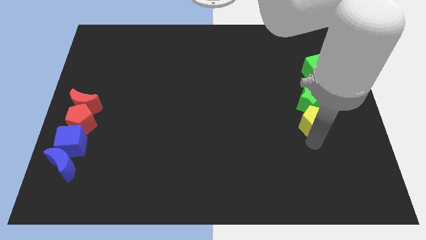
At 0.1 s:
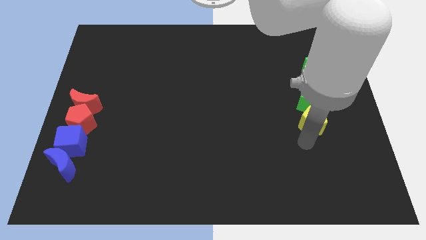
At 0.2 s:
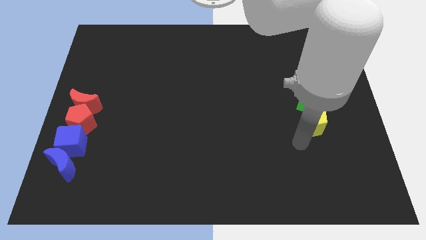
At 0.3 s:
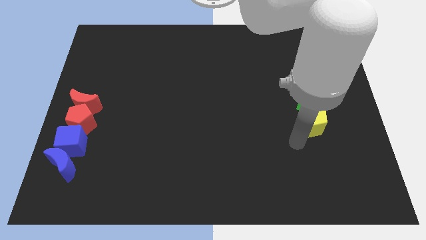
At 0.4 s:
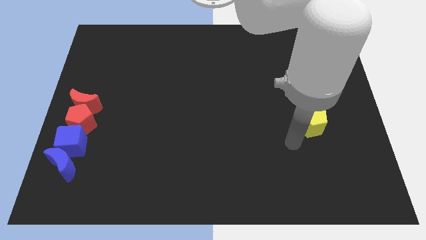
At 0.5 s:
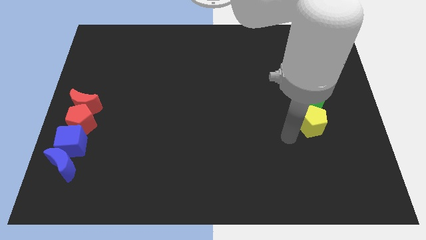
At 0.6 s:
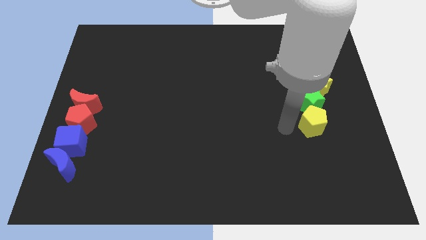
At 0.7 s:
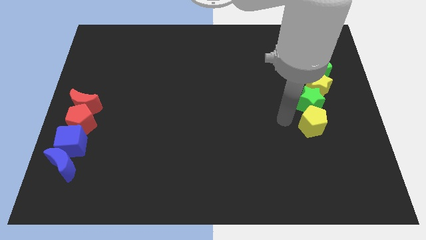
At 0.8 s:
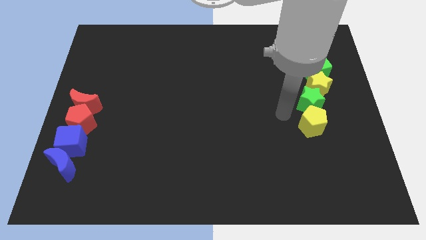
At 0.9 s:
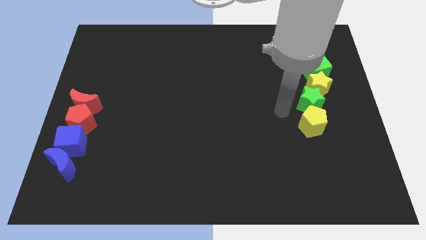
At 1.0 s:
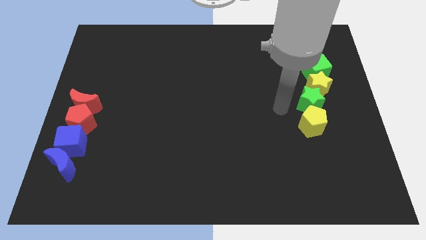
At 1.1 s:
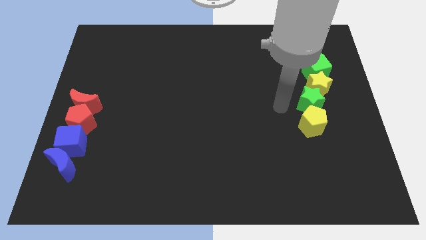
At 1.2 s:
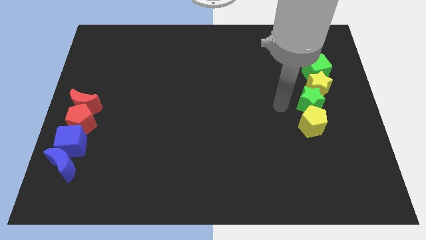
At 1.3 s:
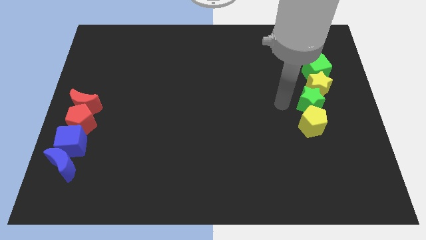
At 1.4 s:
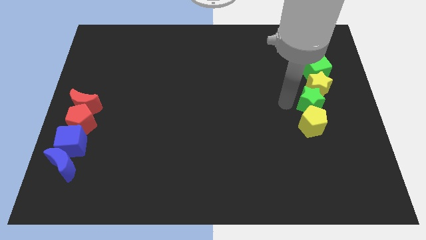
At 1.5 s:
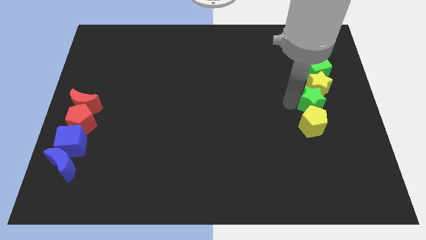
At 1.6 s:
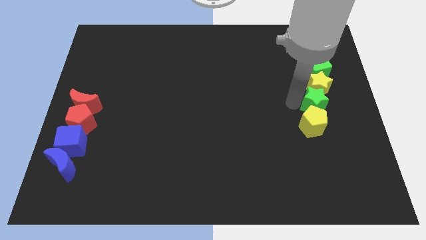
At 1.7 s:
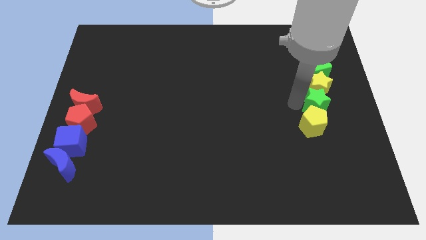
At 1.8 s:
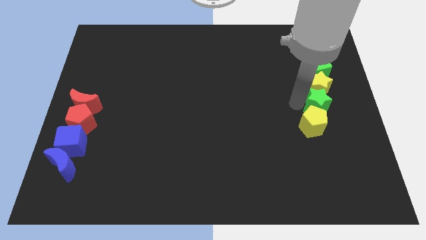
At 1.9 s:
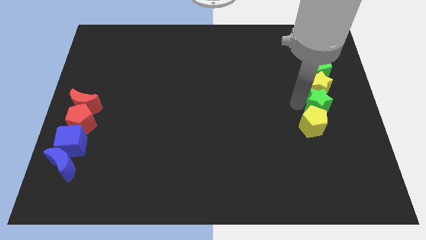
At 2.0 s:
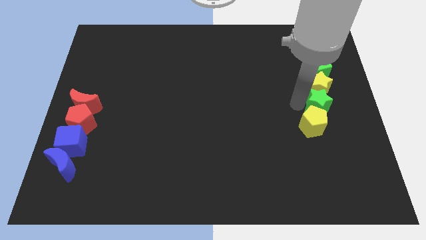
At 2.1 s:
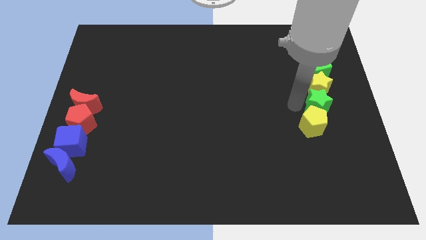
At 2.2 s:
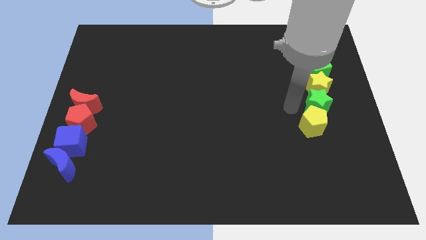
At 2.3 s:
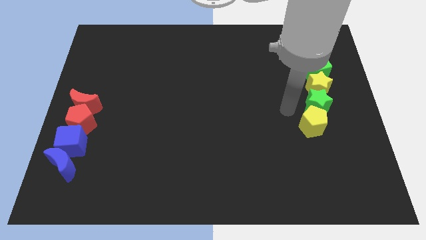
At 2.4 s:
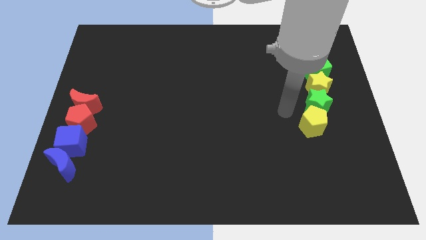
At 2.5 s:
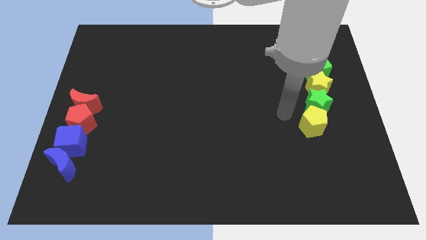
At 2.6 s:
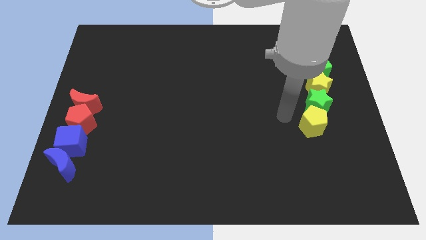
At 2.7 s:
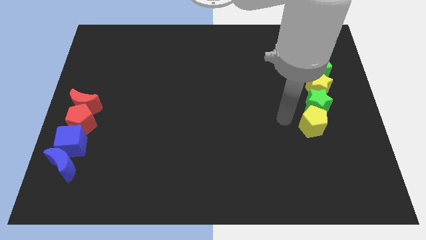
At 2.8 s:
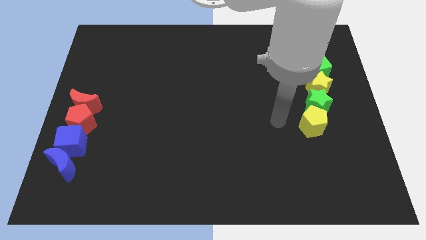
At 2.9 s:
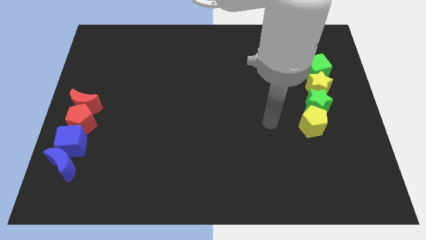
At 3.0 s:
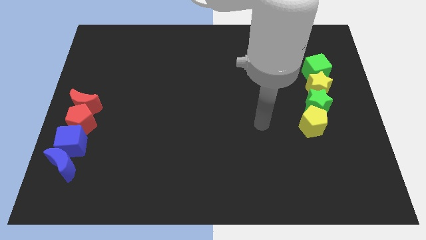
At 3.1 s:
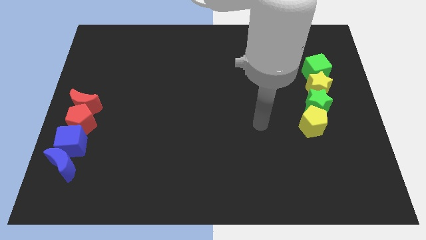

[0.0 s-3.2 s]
adjust the green star in between the yellow star and yellow pentagon

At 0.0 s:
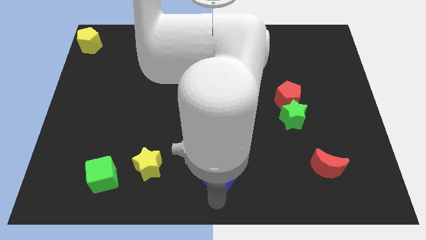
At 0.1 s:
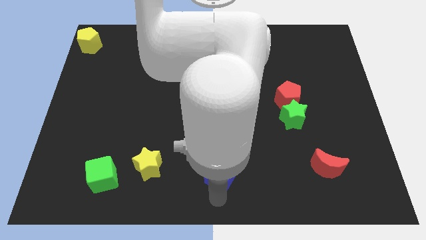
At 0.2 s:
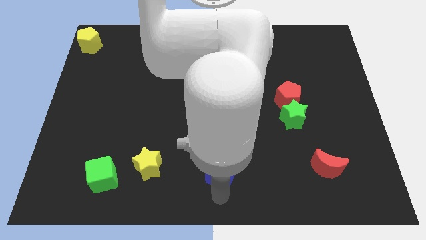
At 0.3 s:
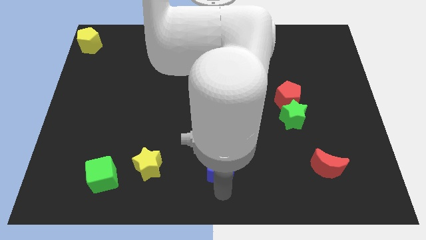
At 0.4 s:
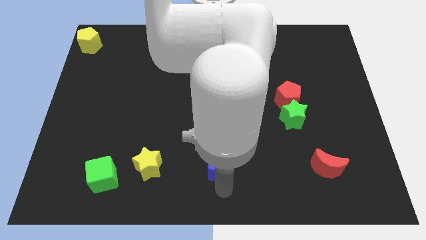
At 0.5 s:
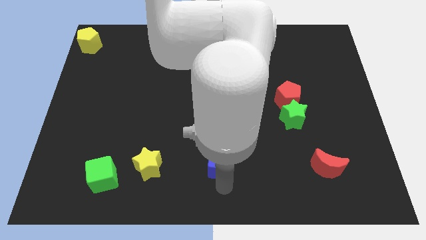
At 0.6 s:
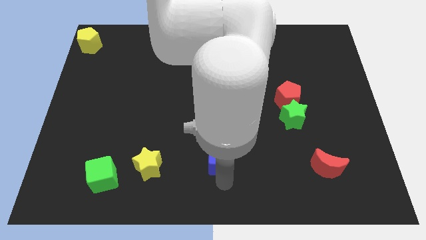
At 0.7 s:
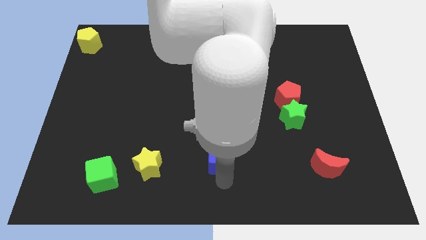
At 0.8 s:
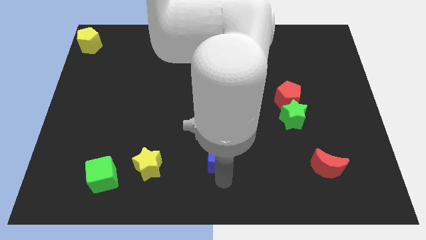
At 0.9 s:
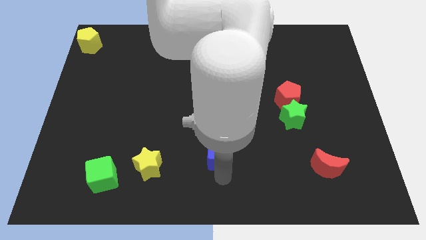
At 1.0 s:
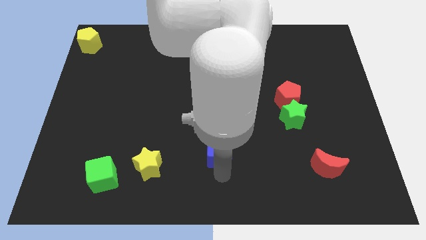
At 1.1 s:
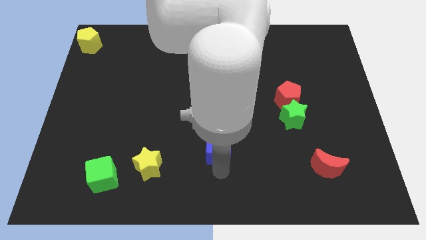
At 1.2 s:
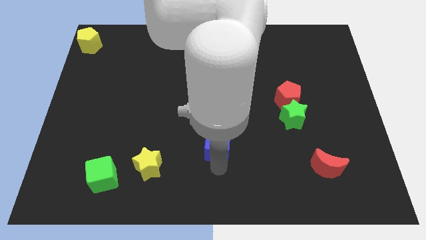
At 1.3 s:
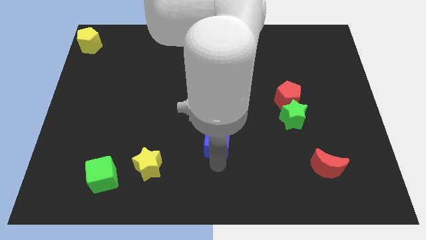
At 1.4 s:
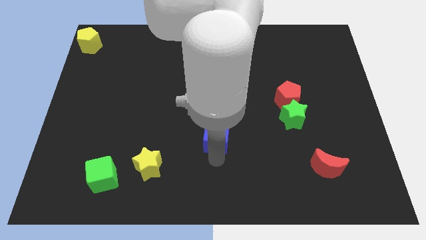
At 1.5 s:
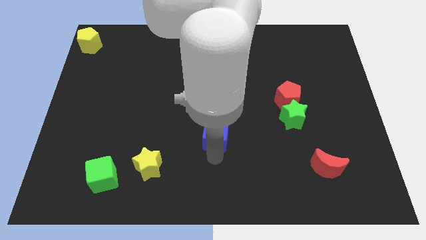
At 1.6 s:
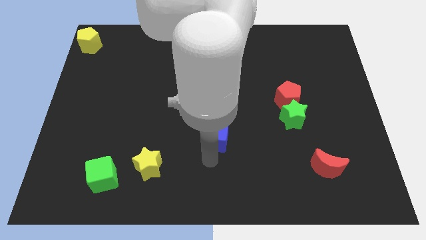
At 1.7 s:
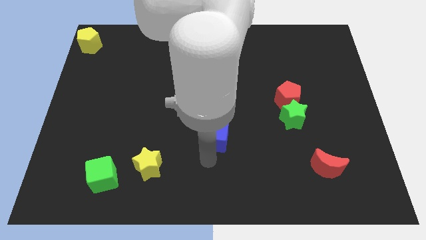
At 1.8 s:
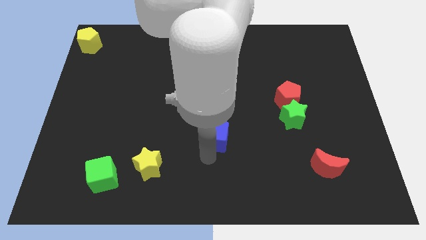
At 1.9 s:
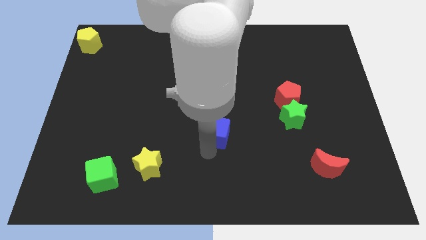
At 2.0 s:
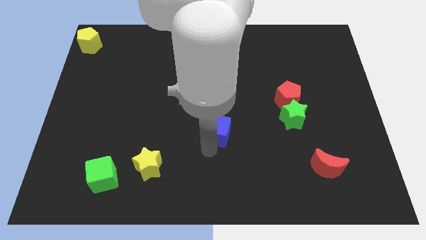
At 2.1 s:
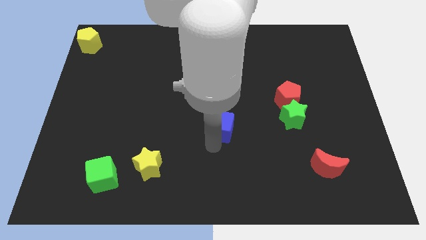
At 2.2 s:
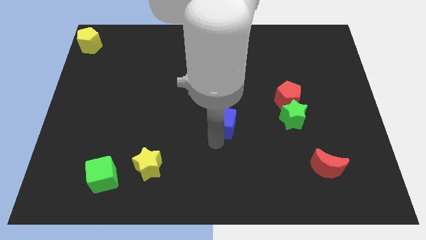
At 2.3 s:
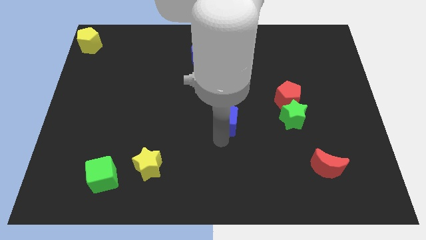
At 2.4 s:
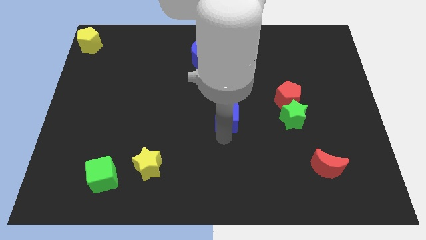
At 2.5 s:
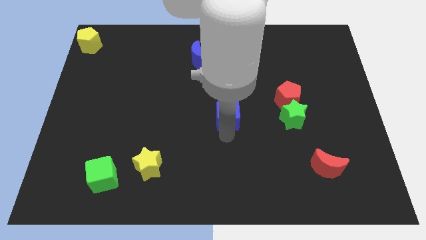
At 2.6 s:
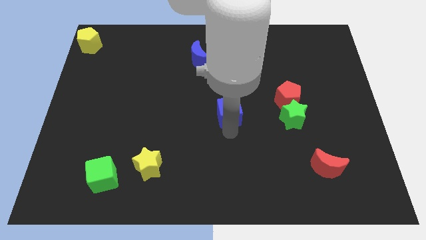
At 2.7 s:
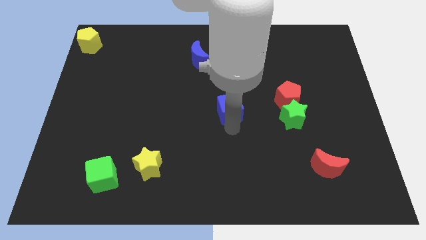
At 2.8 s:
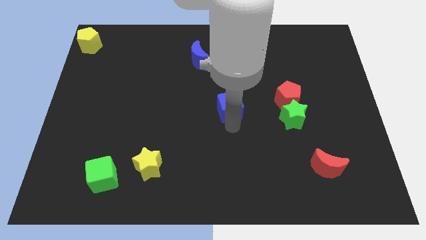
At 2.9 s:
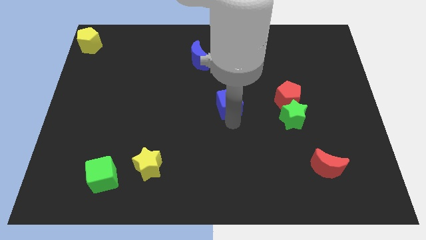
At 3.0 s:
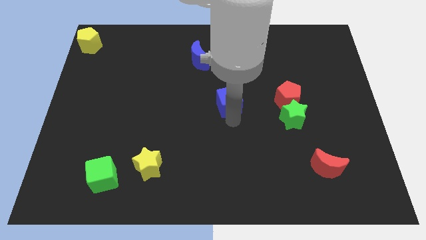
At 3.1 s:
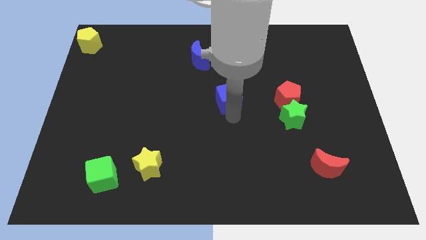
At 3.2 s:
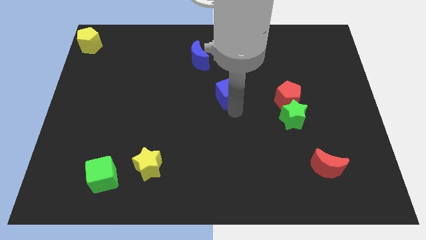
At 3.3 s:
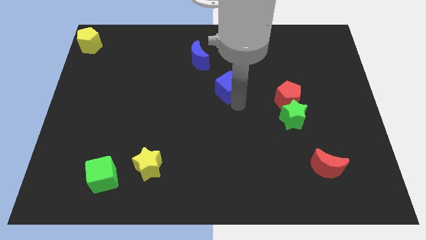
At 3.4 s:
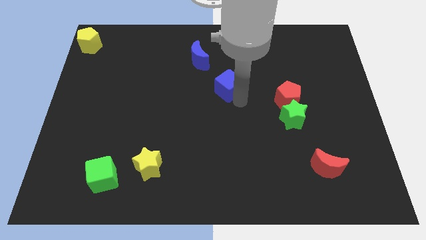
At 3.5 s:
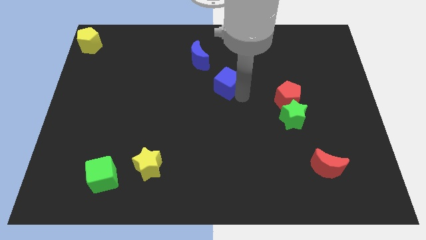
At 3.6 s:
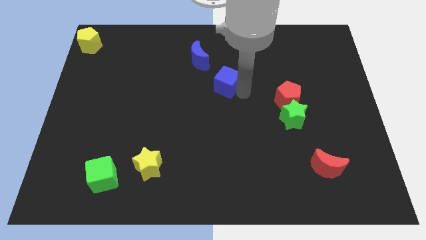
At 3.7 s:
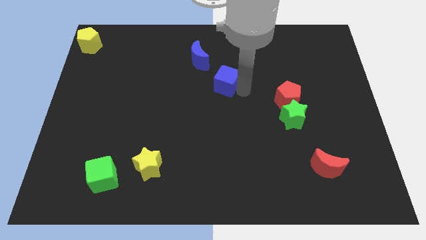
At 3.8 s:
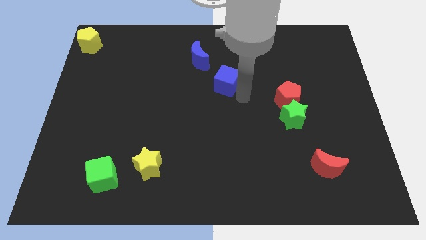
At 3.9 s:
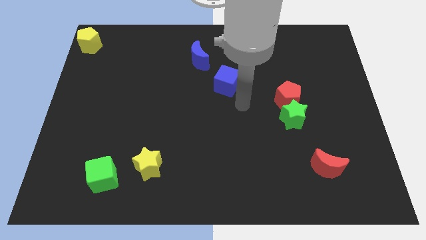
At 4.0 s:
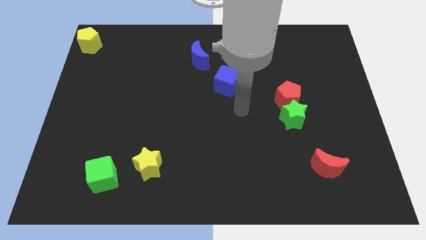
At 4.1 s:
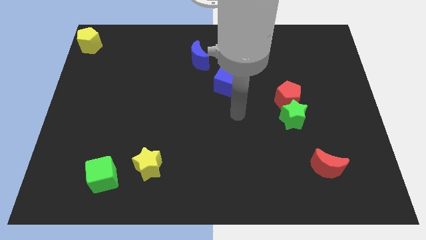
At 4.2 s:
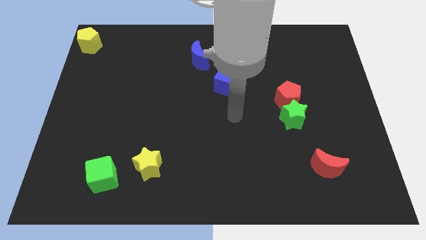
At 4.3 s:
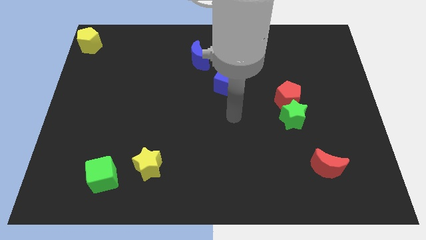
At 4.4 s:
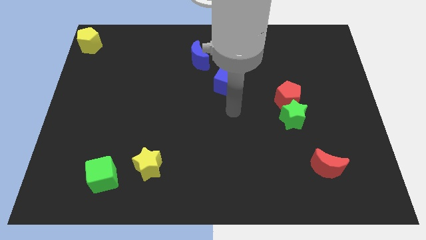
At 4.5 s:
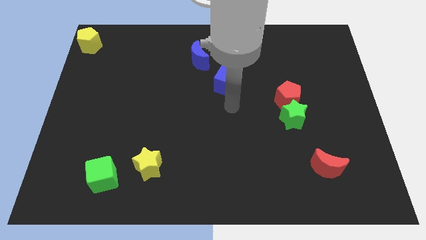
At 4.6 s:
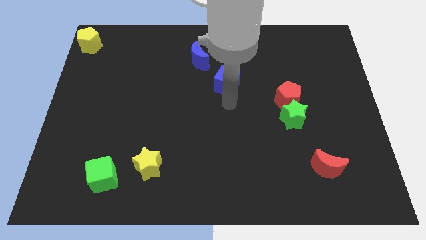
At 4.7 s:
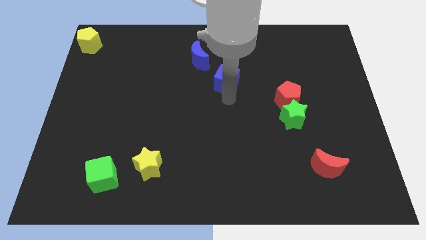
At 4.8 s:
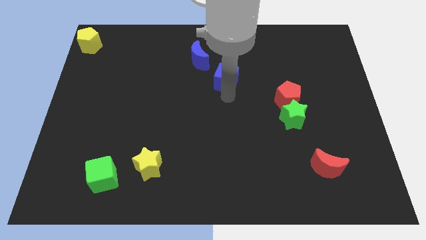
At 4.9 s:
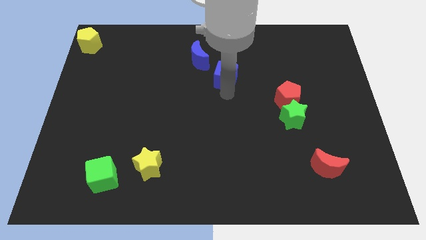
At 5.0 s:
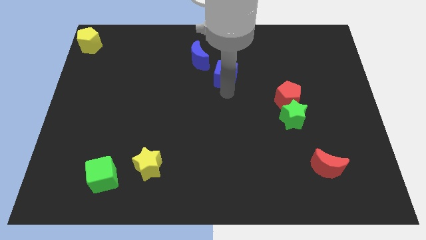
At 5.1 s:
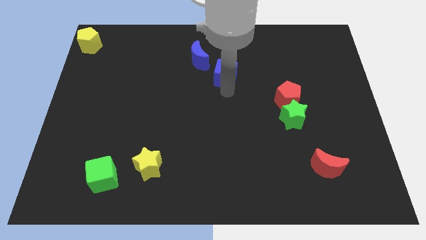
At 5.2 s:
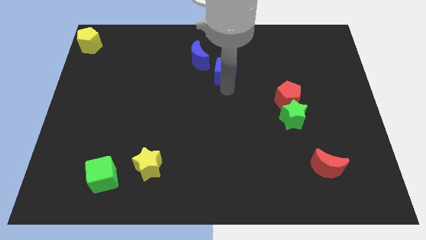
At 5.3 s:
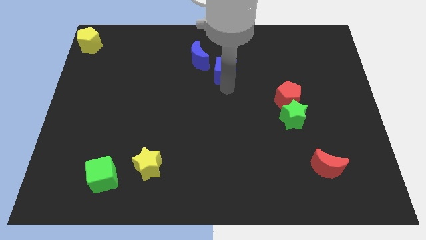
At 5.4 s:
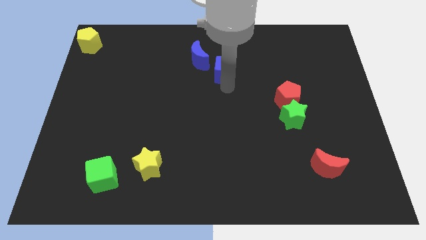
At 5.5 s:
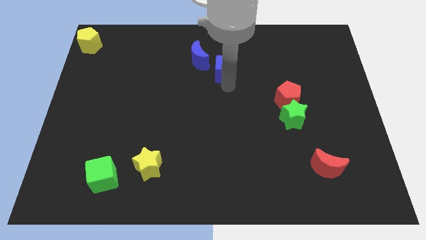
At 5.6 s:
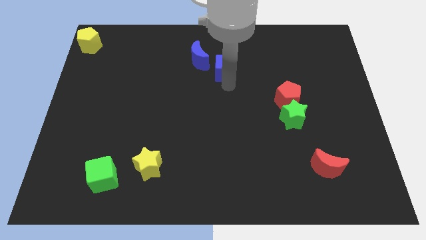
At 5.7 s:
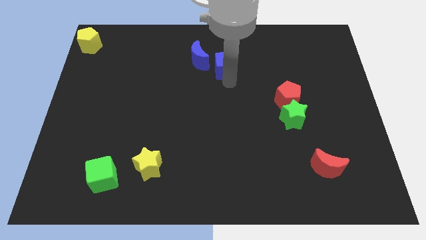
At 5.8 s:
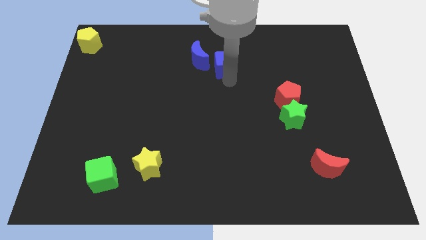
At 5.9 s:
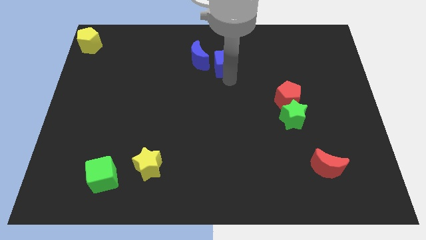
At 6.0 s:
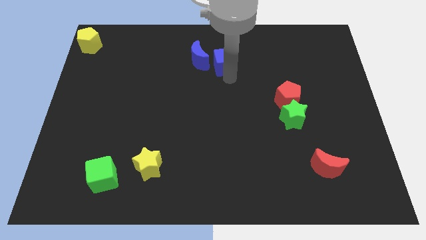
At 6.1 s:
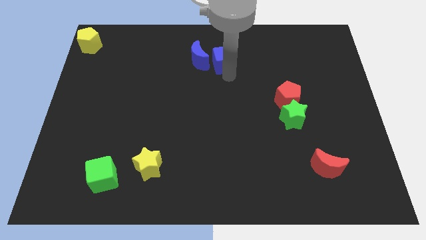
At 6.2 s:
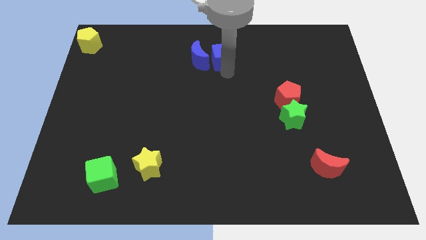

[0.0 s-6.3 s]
put the blue cube to the right of the blue crescent
